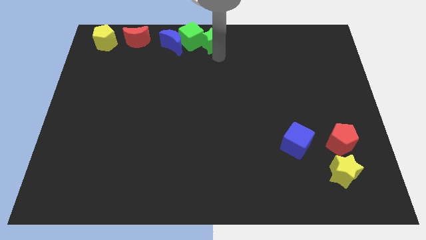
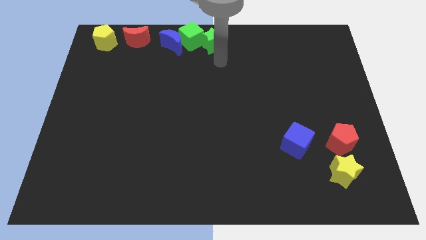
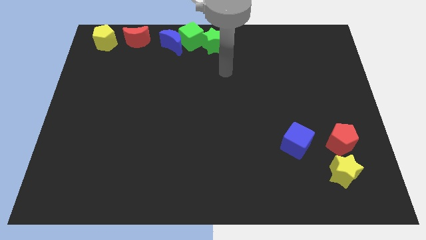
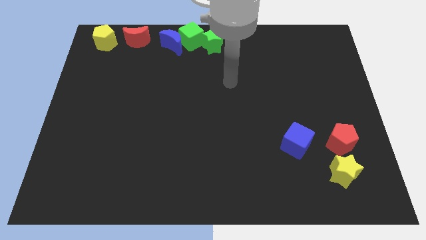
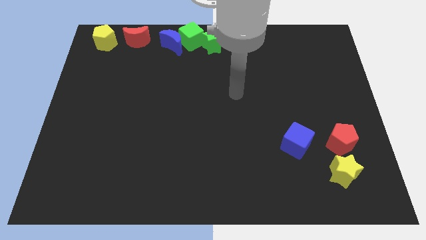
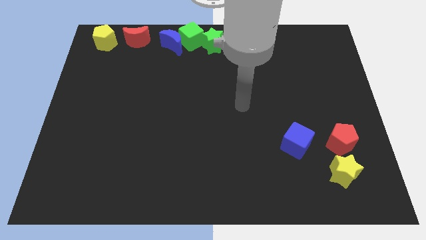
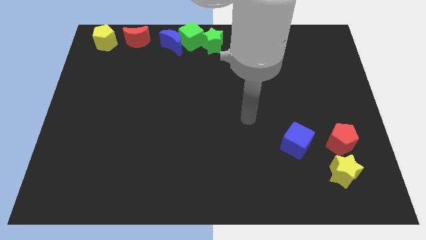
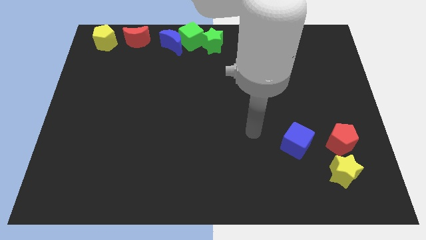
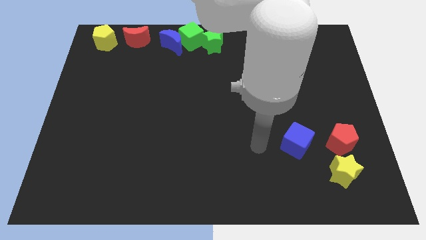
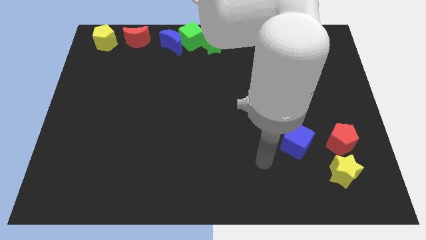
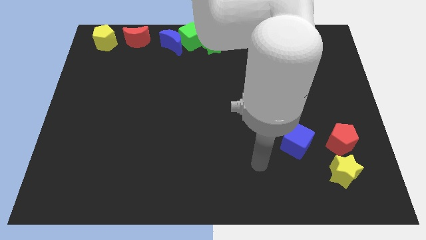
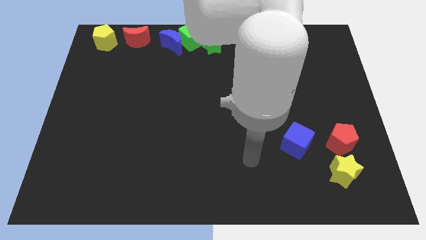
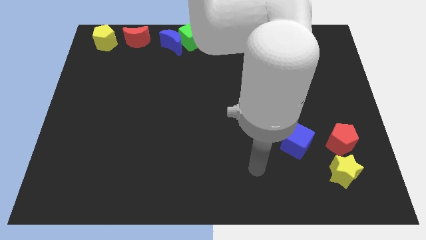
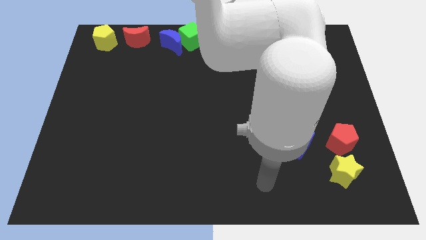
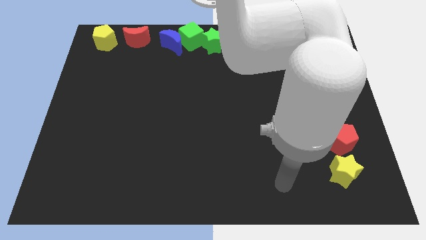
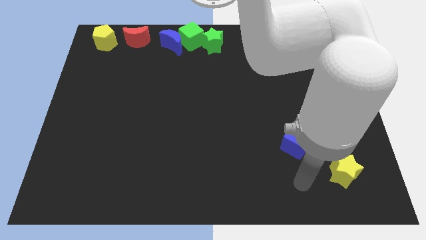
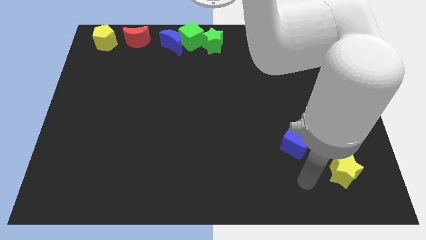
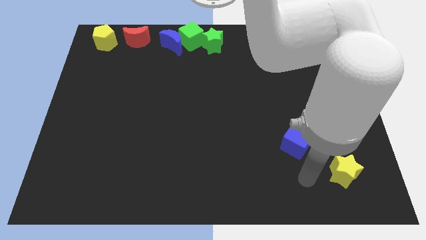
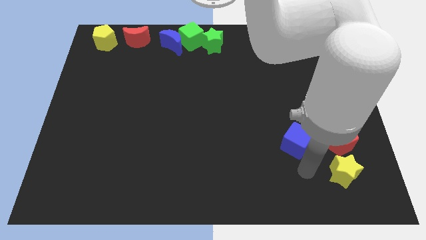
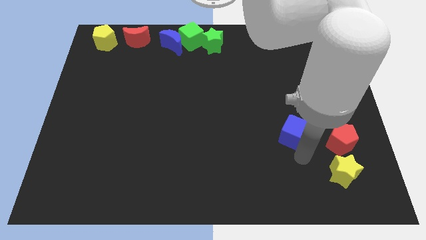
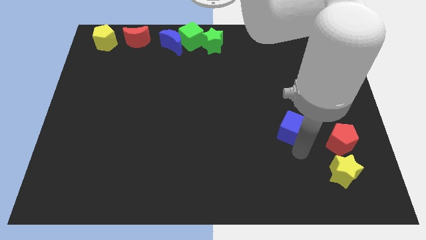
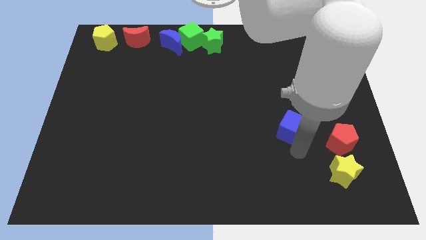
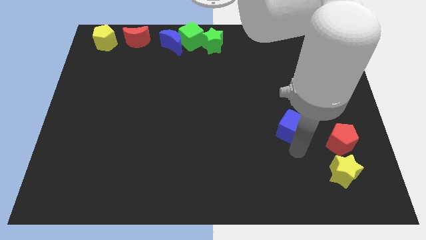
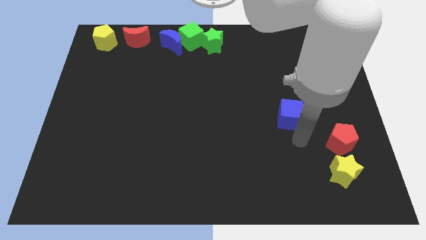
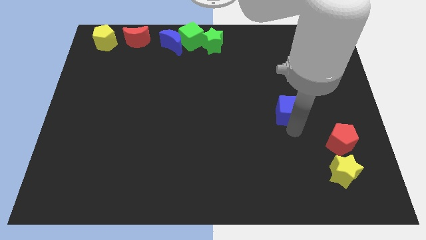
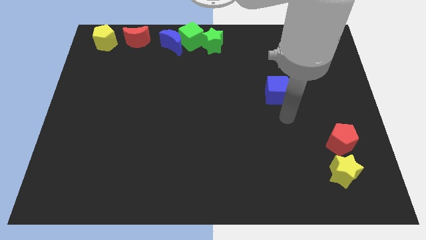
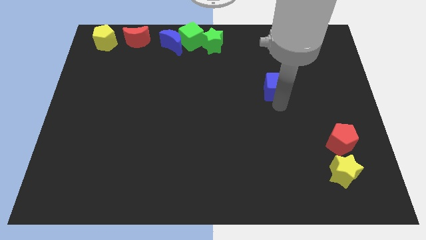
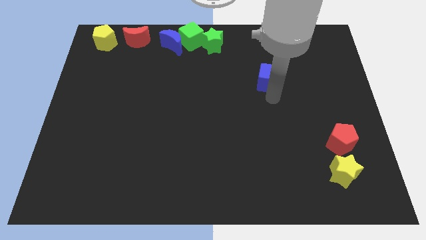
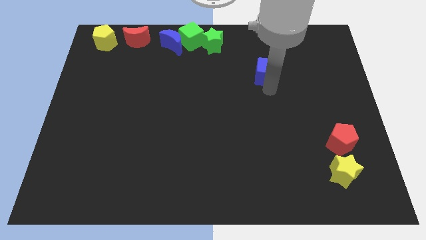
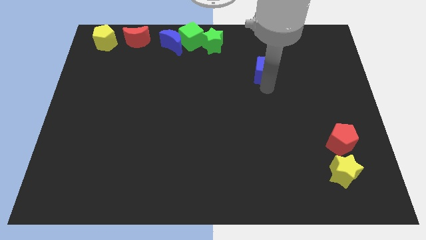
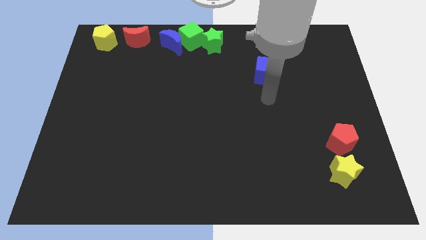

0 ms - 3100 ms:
place the blue cube diagonally below the bottom right side of the green star

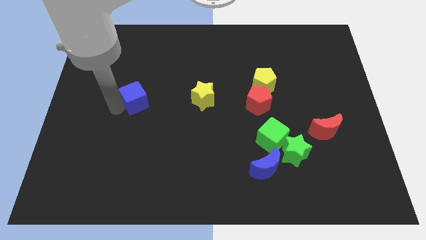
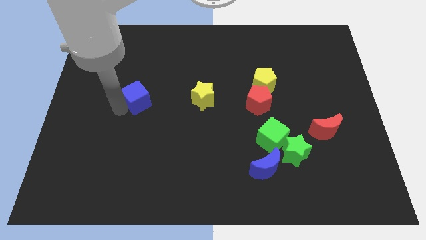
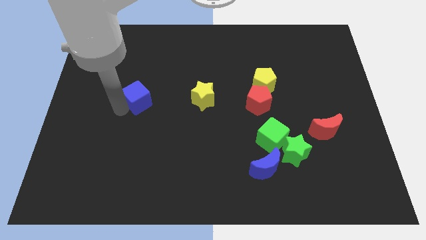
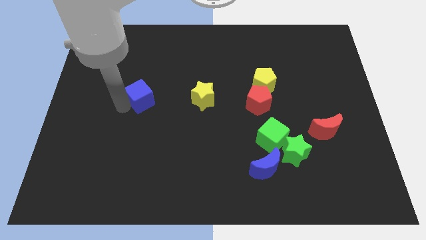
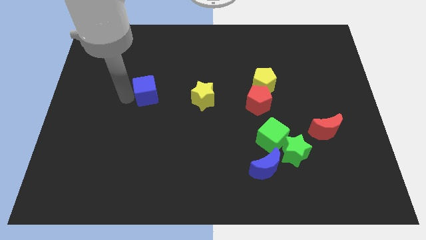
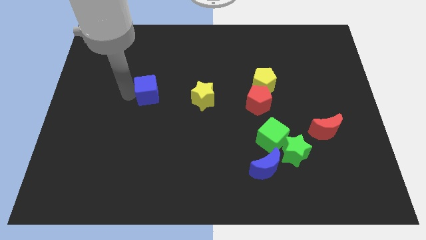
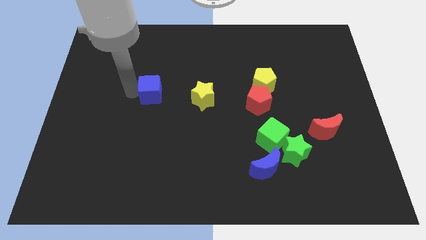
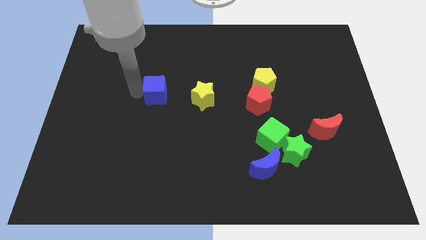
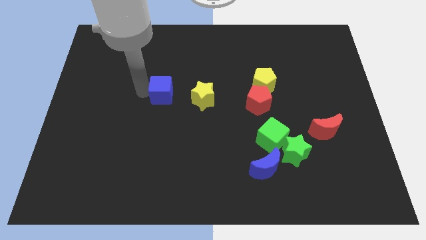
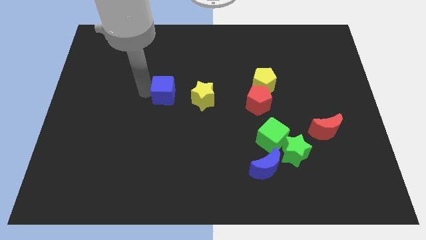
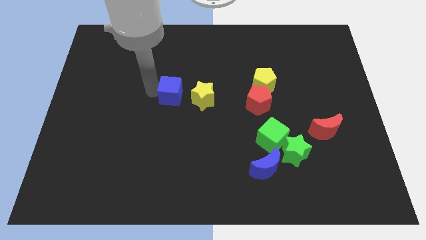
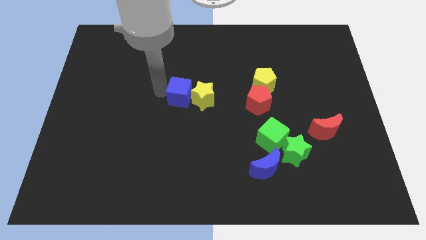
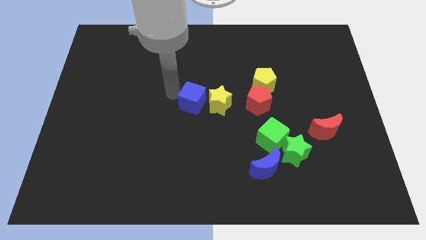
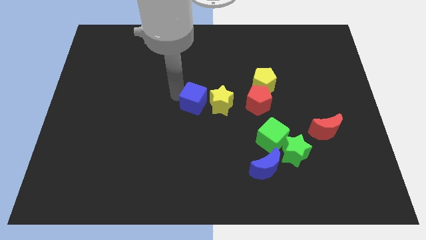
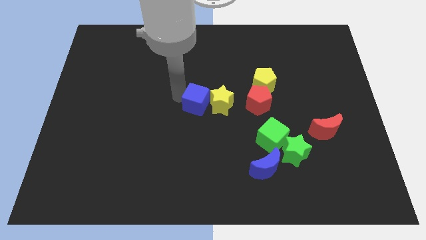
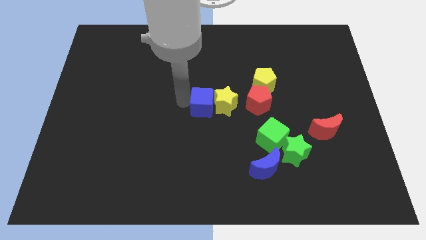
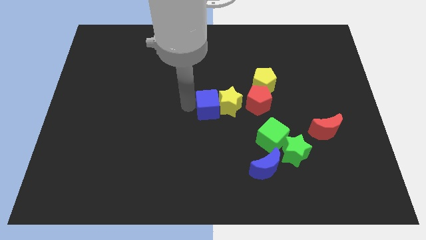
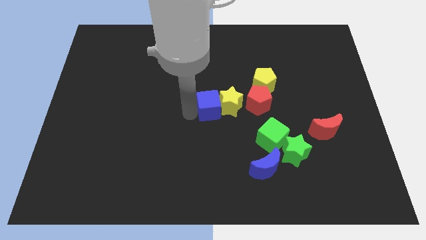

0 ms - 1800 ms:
slide the blue cube into the yellow star

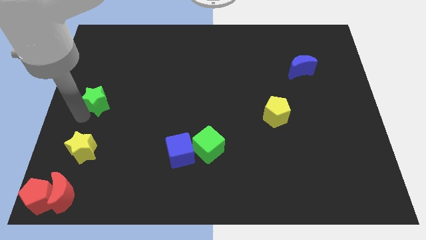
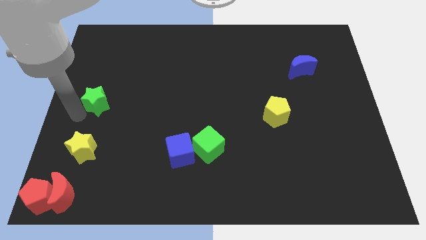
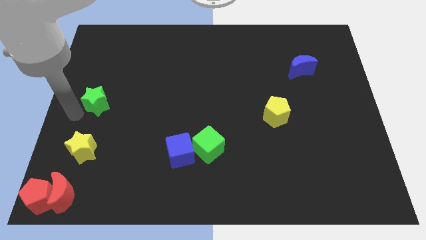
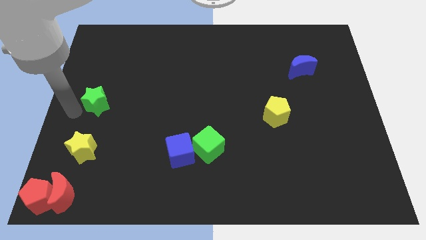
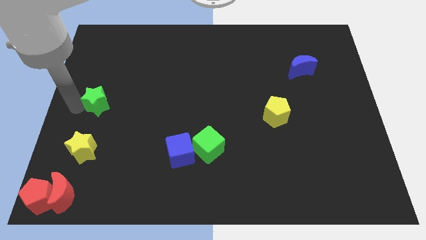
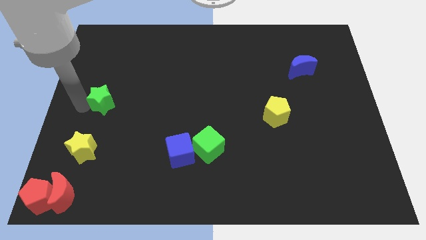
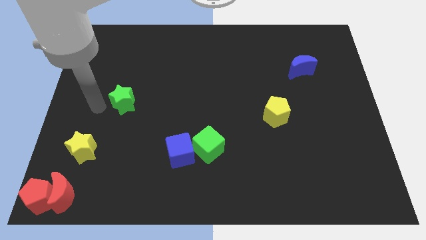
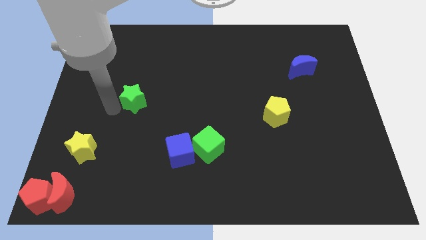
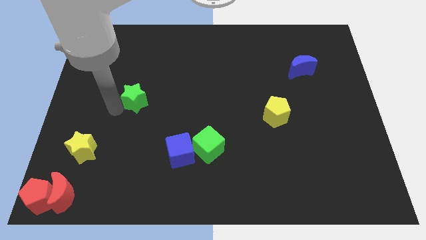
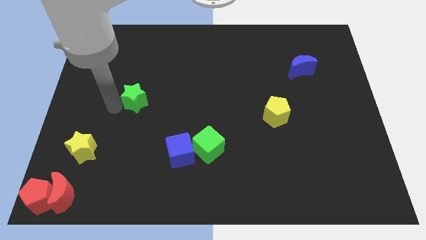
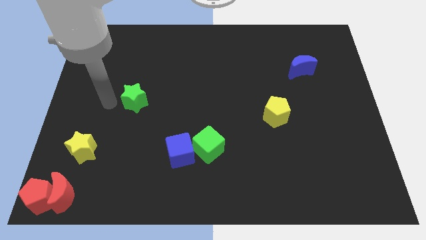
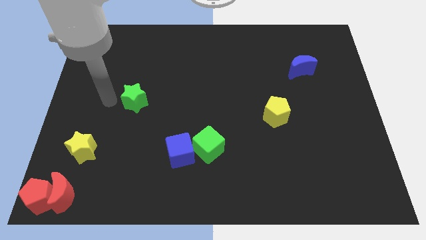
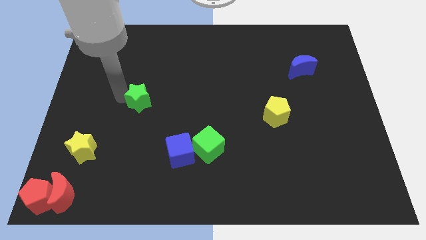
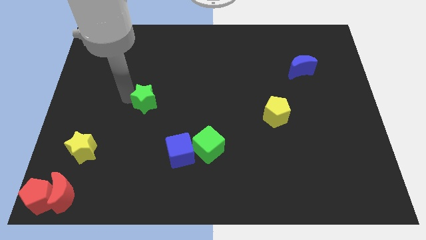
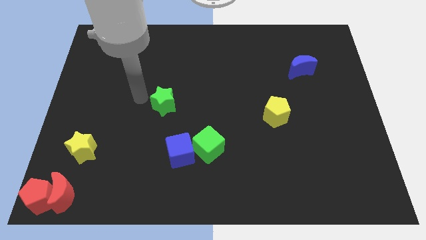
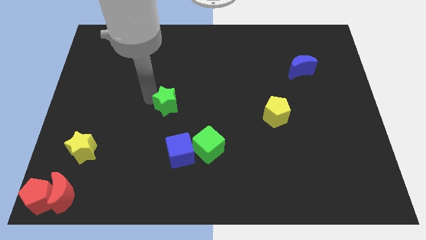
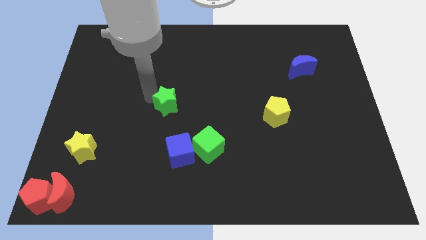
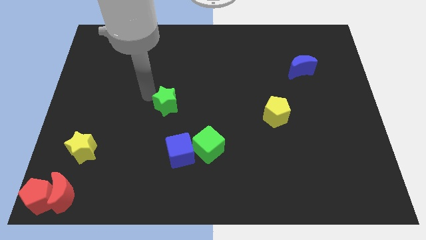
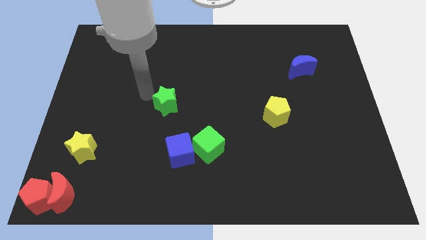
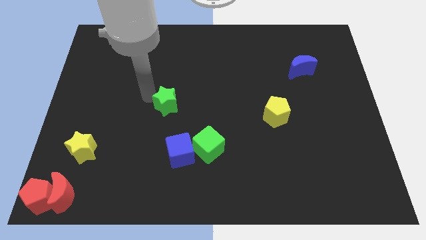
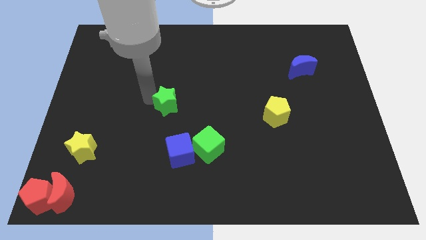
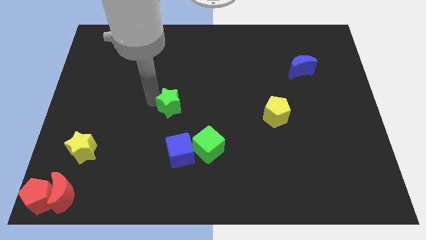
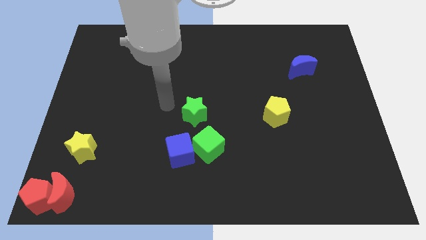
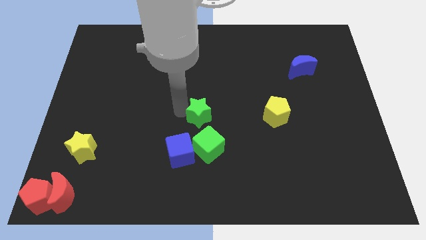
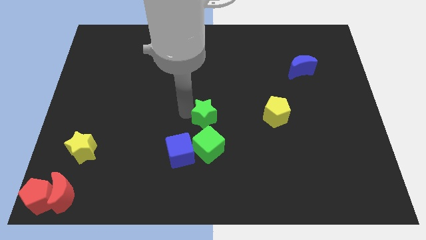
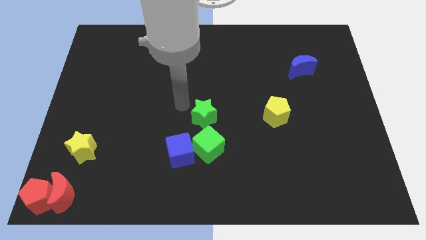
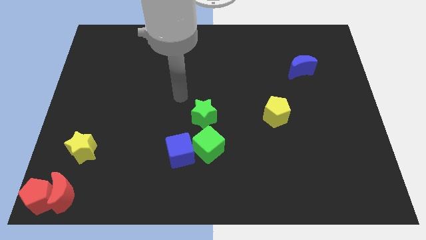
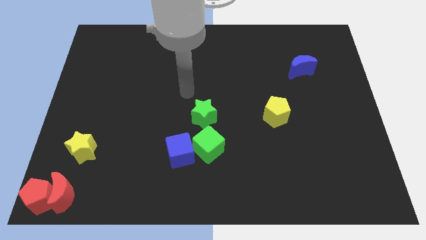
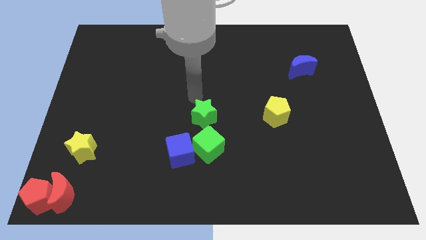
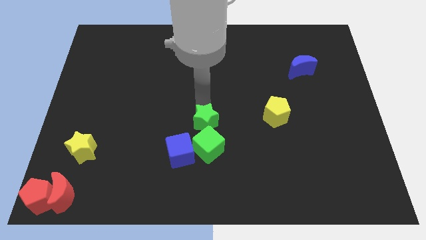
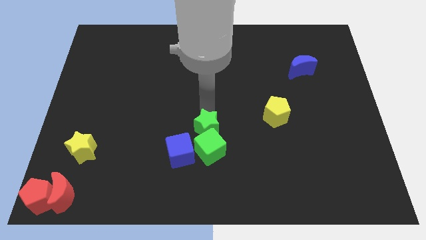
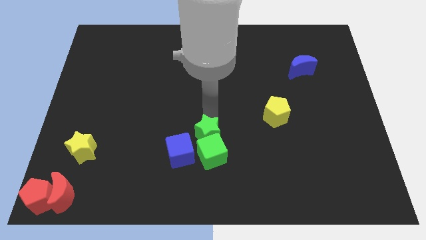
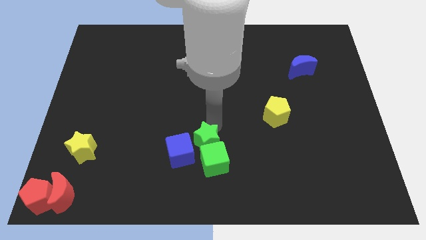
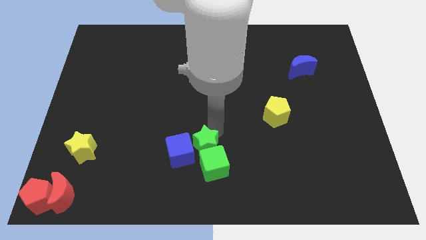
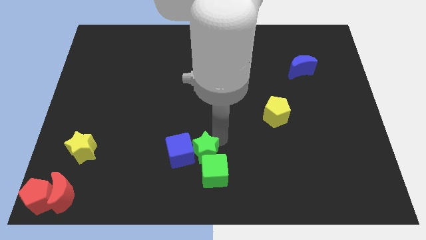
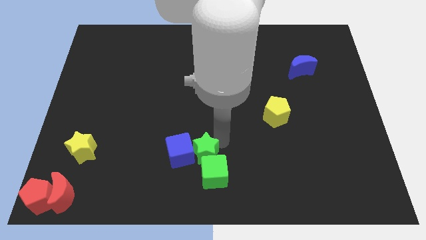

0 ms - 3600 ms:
move green star into green cube

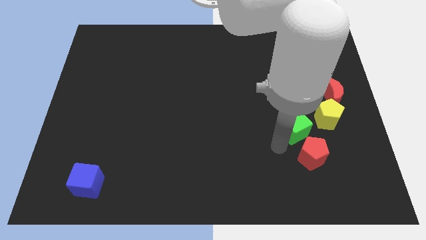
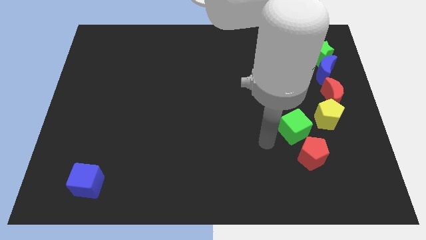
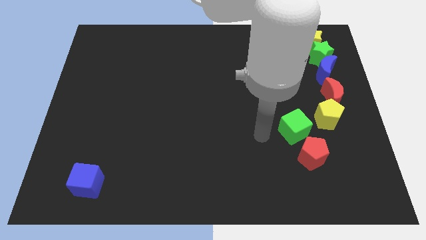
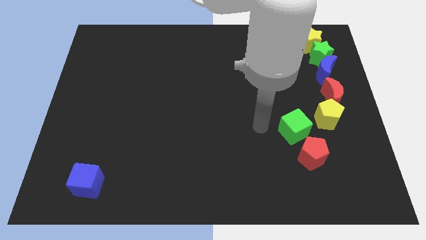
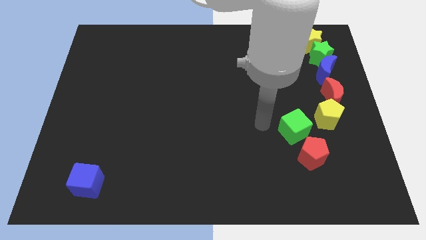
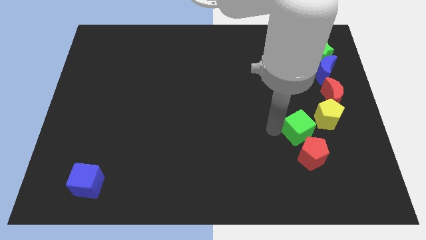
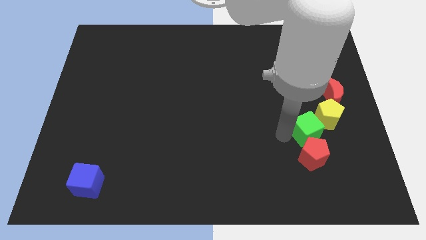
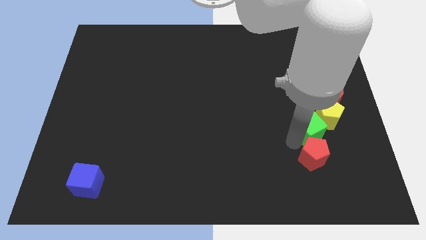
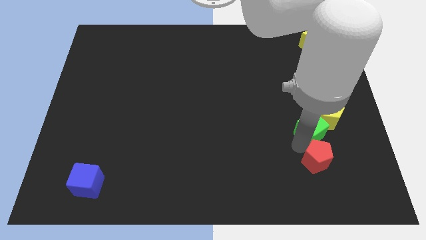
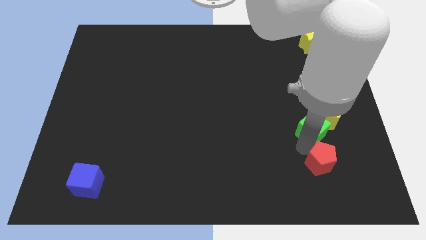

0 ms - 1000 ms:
place the green cube above the red pentagon
